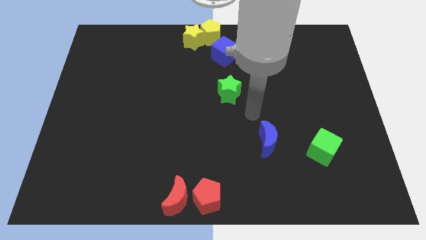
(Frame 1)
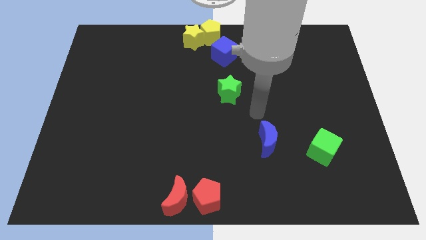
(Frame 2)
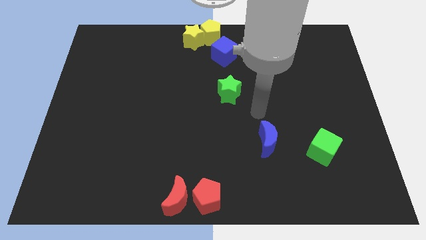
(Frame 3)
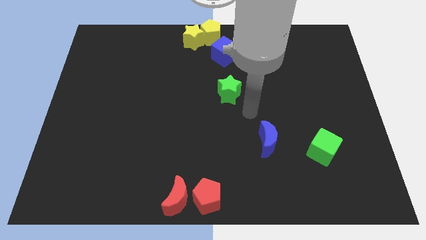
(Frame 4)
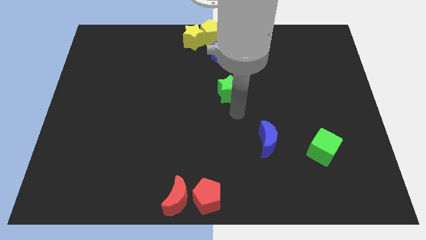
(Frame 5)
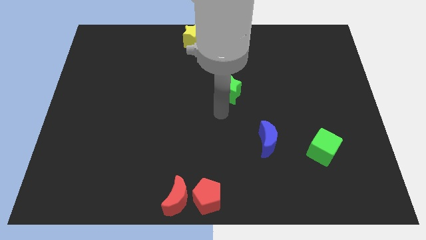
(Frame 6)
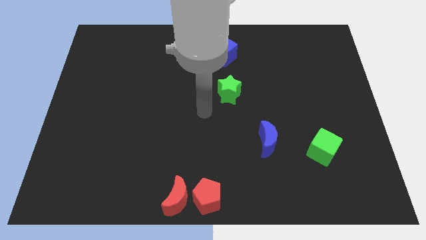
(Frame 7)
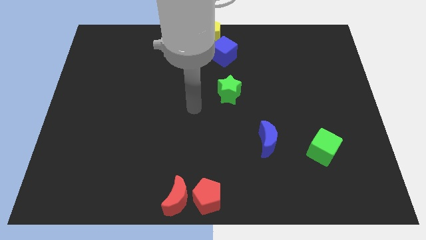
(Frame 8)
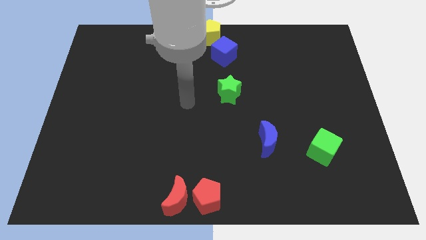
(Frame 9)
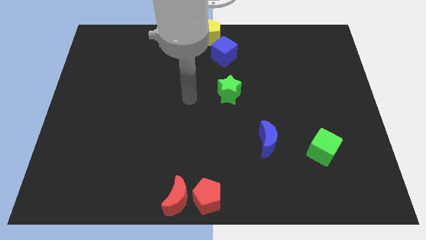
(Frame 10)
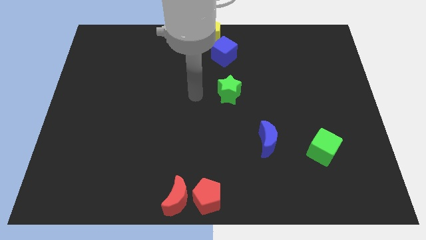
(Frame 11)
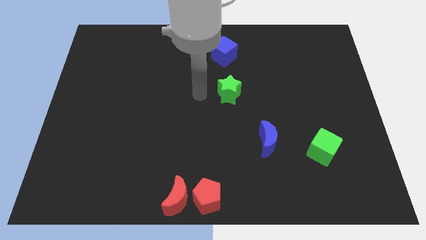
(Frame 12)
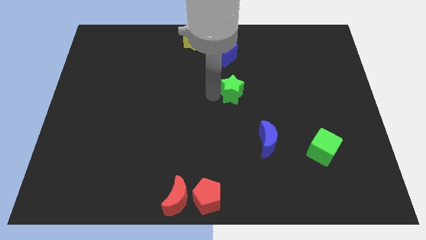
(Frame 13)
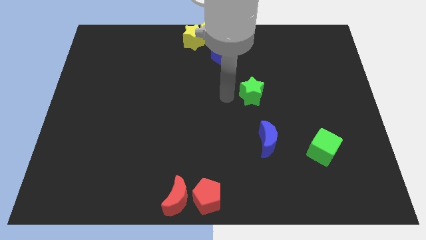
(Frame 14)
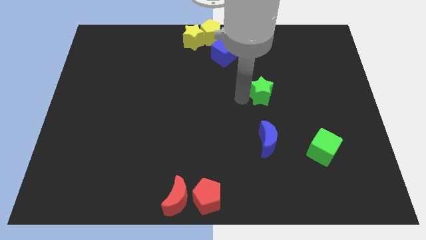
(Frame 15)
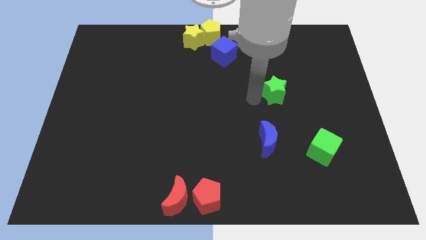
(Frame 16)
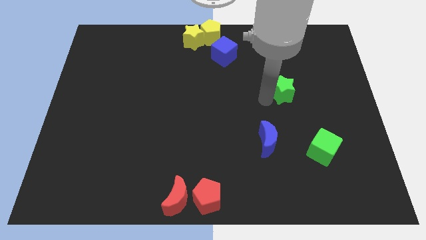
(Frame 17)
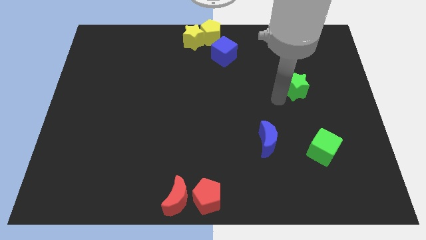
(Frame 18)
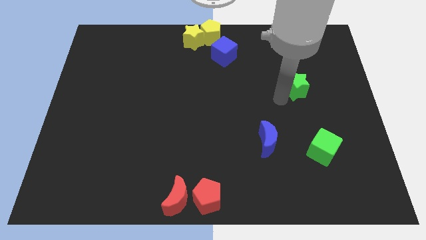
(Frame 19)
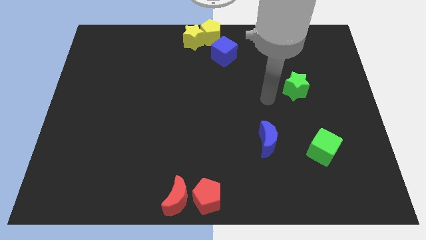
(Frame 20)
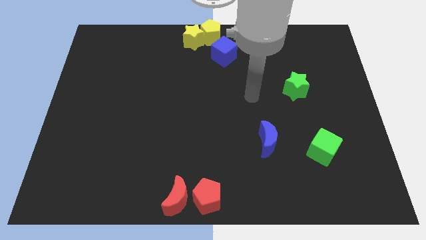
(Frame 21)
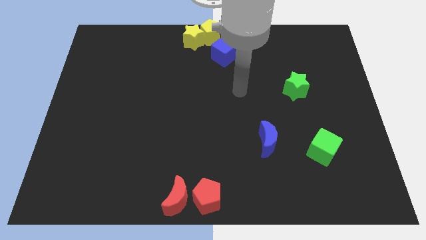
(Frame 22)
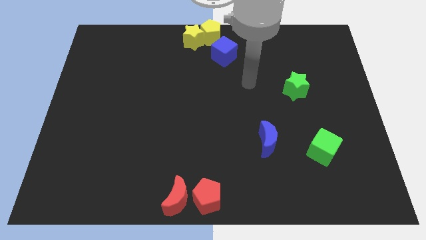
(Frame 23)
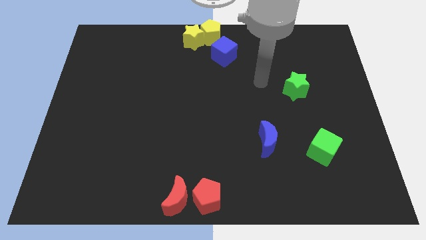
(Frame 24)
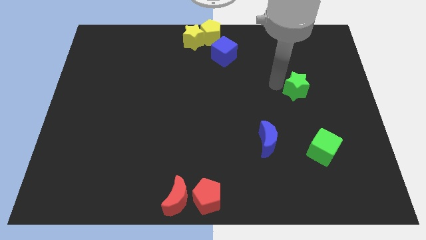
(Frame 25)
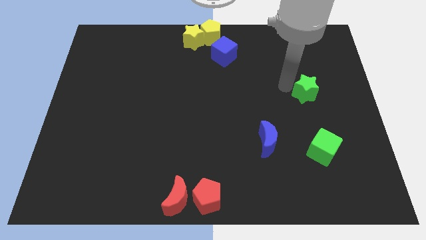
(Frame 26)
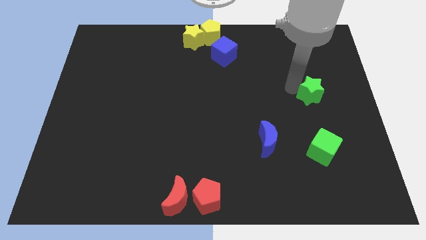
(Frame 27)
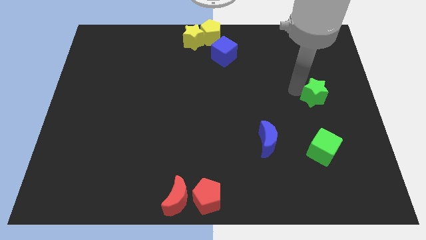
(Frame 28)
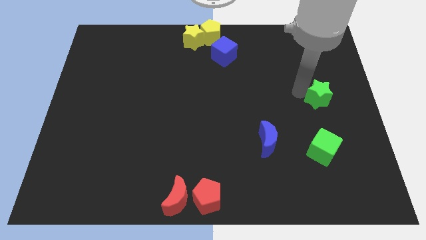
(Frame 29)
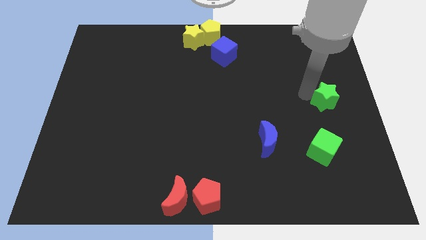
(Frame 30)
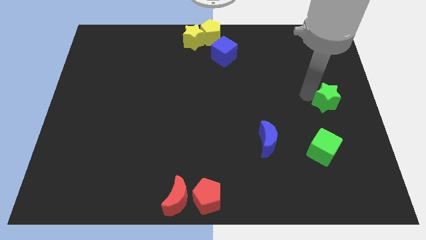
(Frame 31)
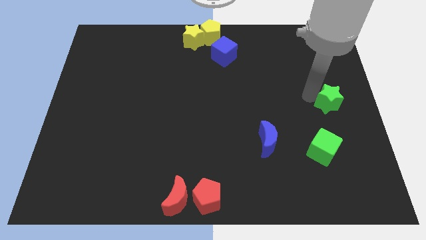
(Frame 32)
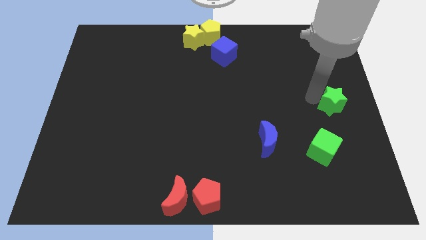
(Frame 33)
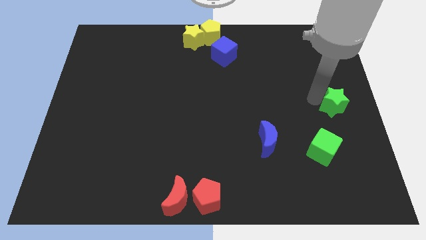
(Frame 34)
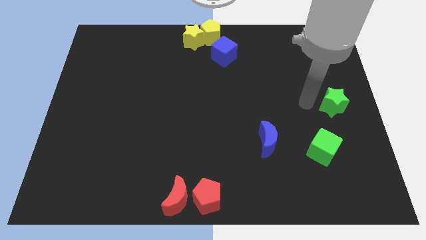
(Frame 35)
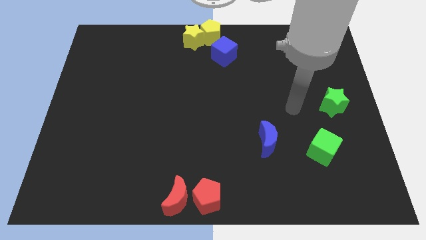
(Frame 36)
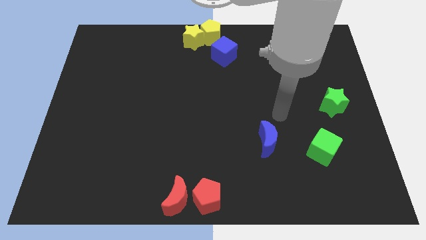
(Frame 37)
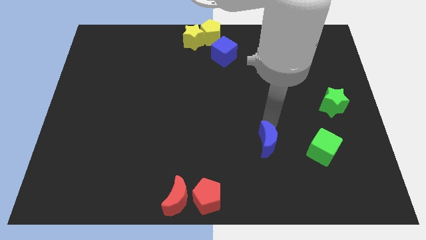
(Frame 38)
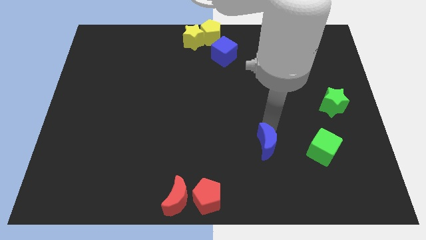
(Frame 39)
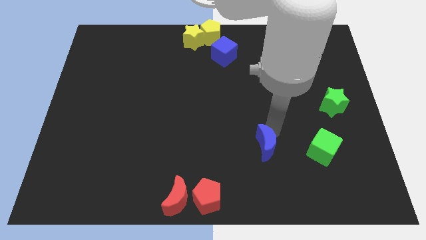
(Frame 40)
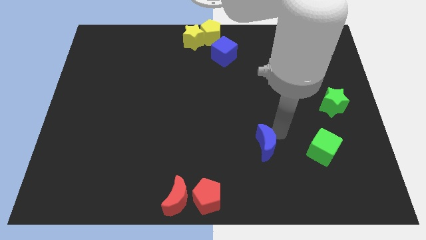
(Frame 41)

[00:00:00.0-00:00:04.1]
move the green star towards the right side of the board

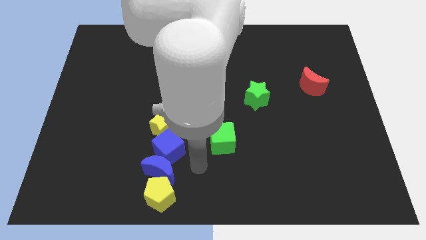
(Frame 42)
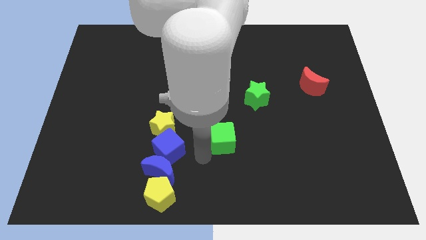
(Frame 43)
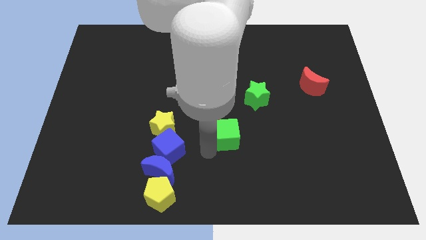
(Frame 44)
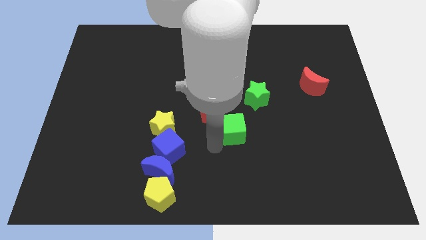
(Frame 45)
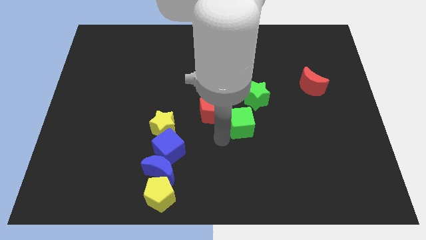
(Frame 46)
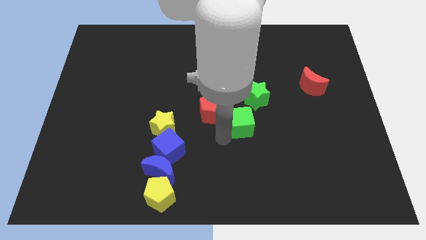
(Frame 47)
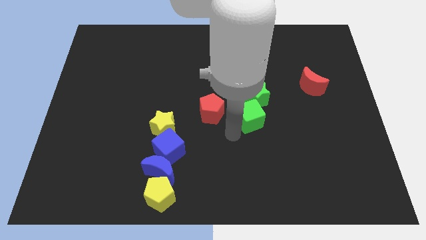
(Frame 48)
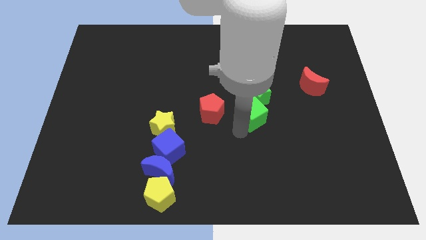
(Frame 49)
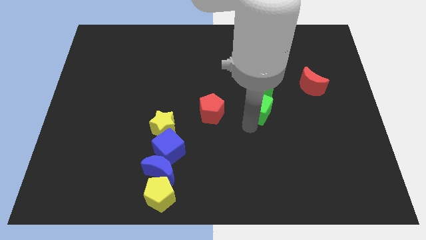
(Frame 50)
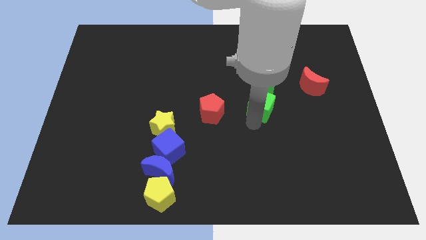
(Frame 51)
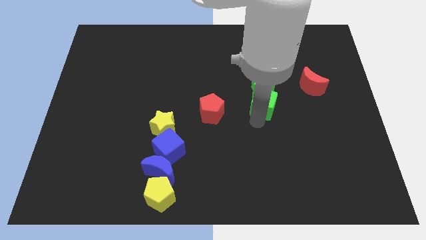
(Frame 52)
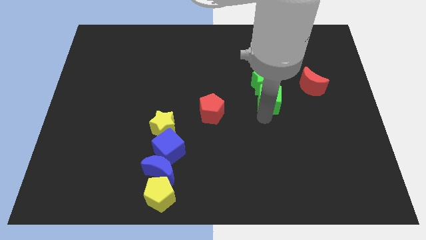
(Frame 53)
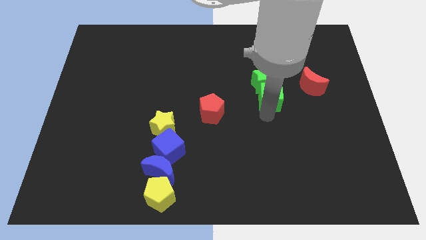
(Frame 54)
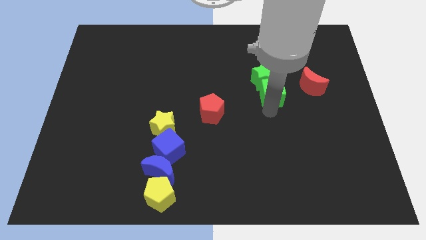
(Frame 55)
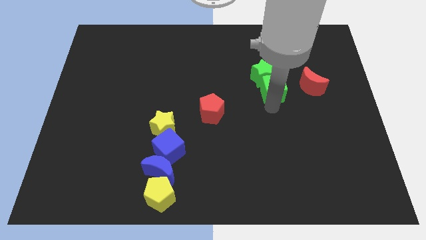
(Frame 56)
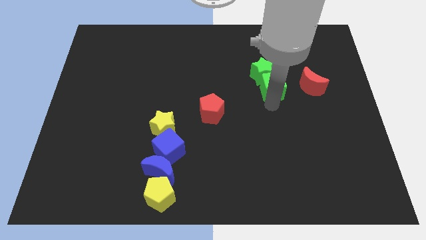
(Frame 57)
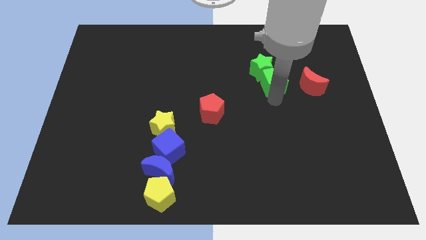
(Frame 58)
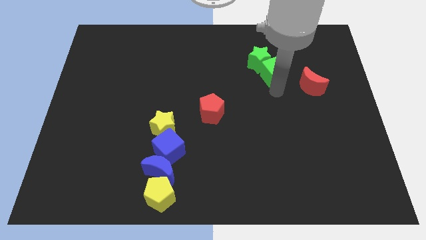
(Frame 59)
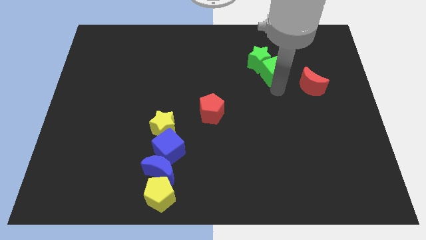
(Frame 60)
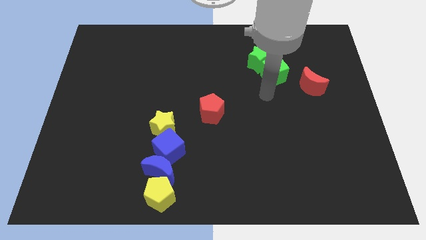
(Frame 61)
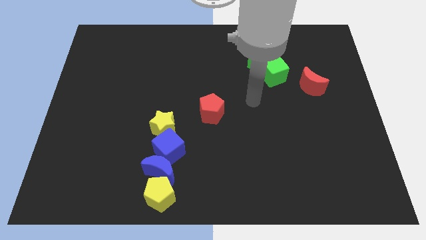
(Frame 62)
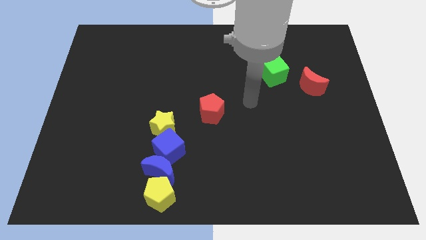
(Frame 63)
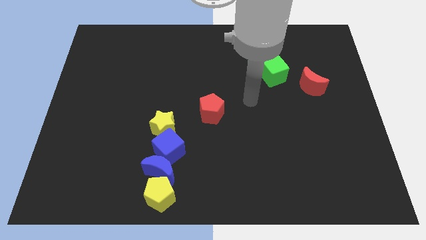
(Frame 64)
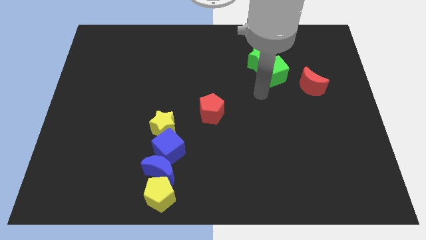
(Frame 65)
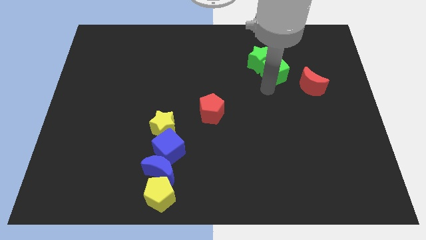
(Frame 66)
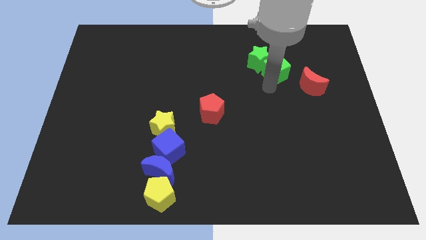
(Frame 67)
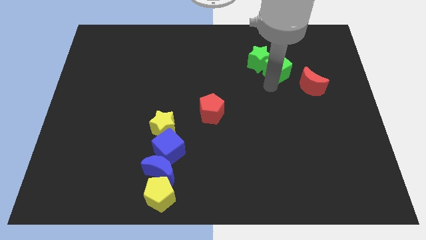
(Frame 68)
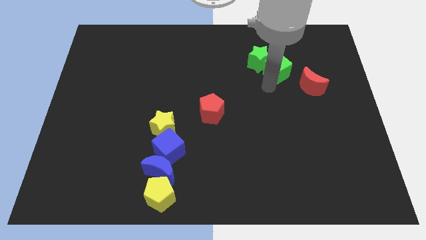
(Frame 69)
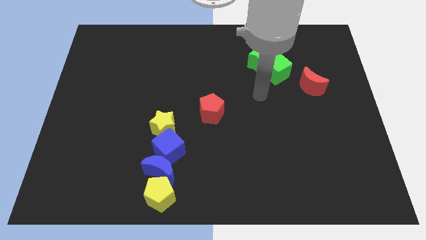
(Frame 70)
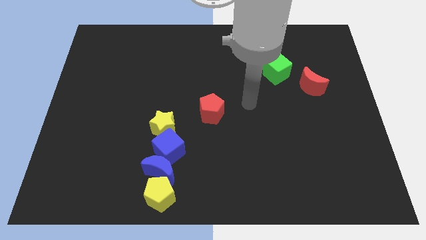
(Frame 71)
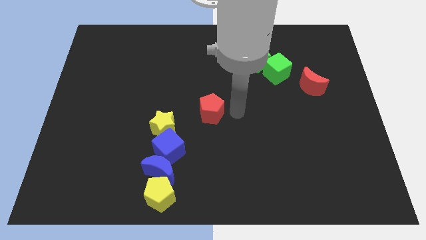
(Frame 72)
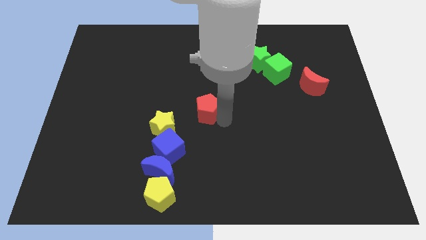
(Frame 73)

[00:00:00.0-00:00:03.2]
drag green star with the help of green cube to the top of the table

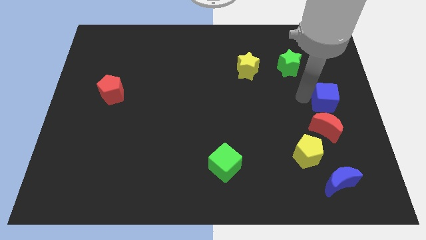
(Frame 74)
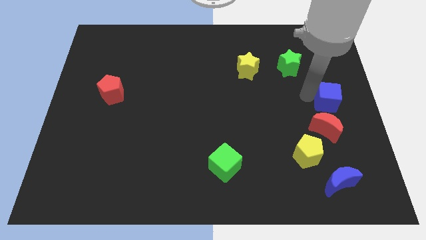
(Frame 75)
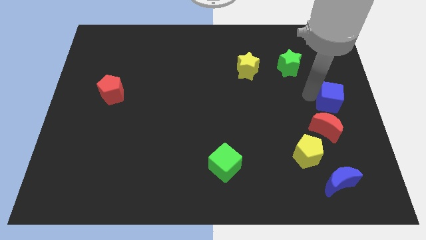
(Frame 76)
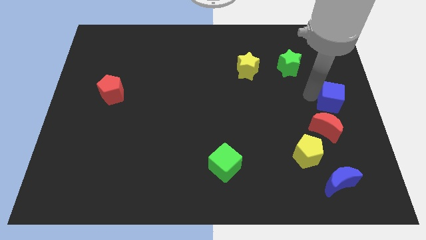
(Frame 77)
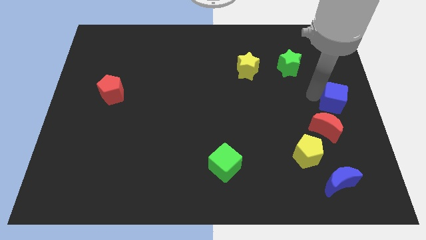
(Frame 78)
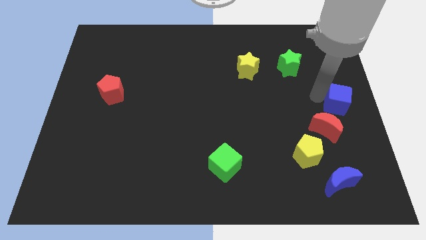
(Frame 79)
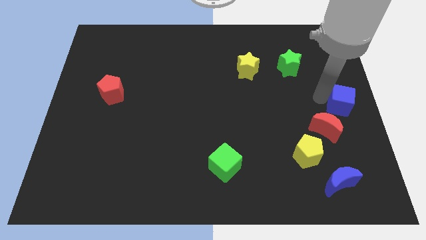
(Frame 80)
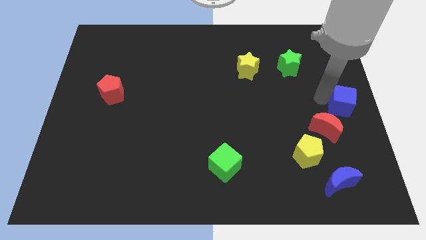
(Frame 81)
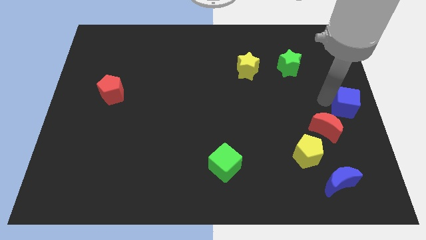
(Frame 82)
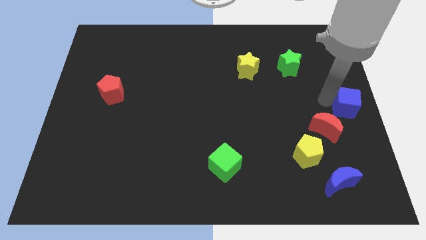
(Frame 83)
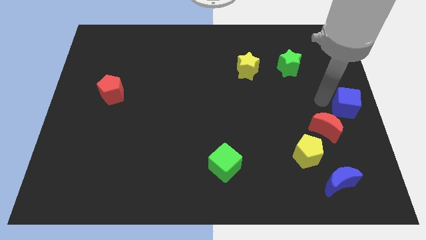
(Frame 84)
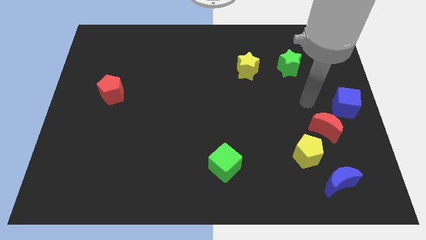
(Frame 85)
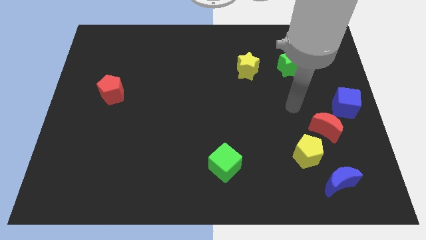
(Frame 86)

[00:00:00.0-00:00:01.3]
move blue cube to the right center

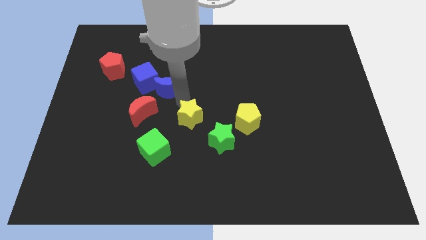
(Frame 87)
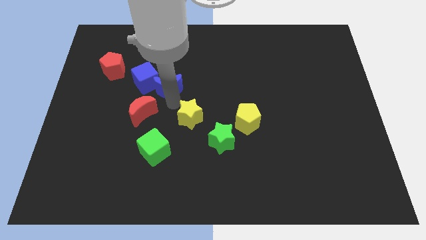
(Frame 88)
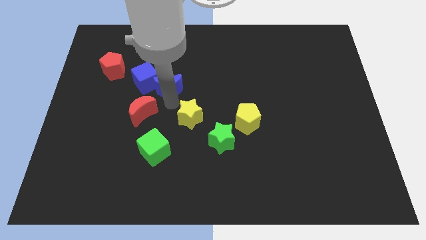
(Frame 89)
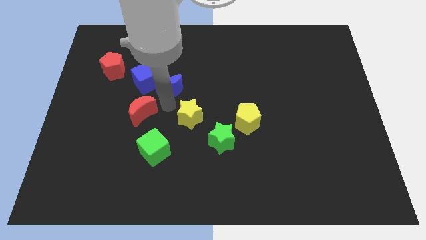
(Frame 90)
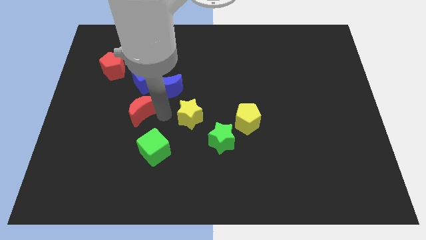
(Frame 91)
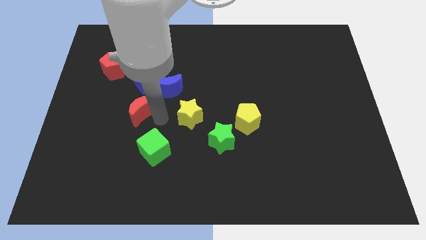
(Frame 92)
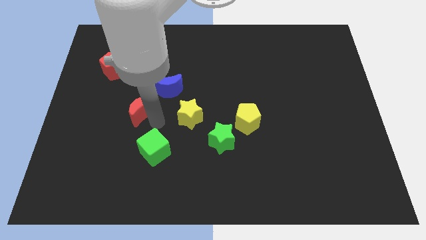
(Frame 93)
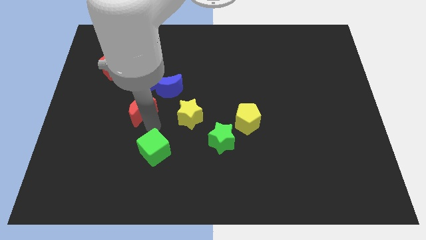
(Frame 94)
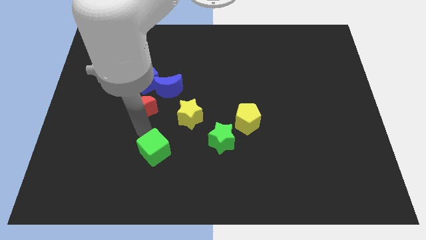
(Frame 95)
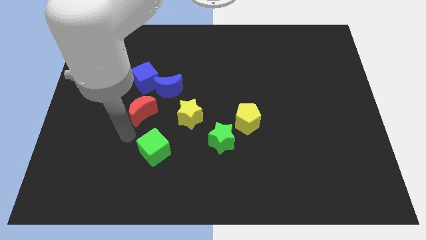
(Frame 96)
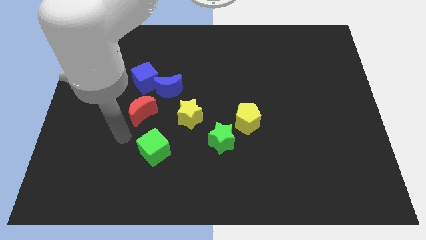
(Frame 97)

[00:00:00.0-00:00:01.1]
point your arm at the bottom of red moon
